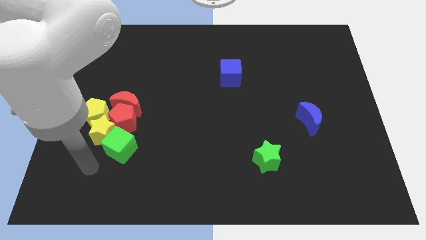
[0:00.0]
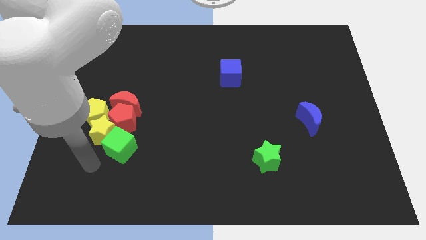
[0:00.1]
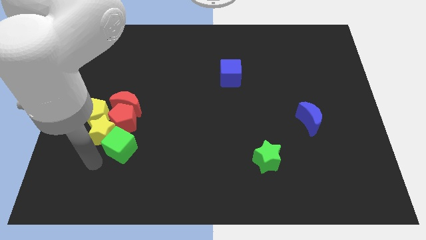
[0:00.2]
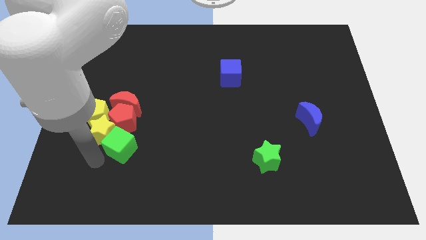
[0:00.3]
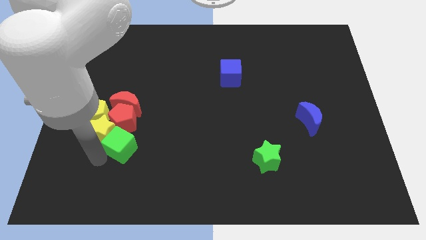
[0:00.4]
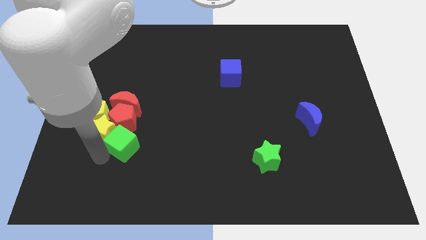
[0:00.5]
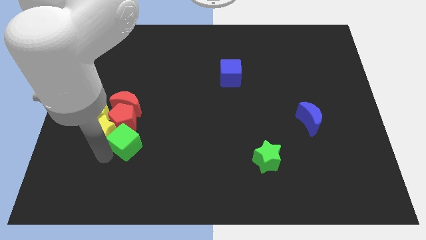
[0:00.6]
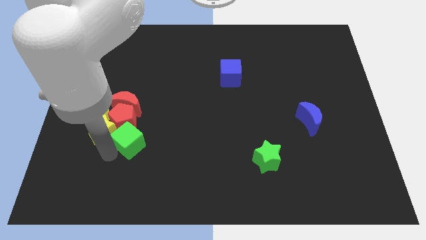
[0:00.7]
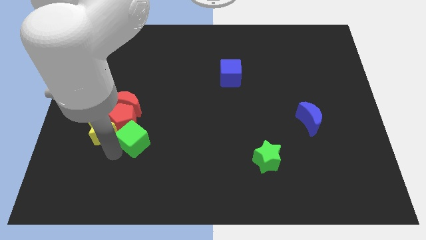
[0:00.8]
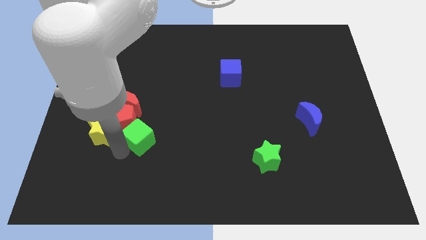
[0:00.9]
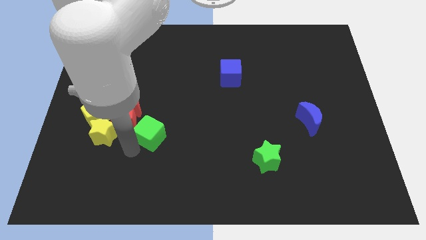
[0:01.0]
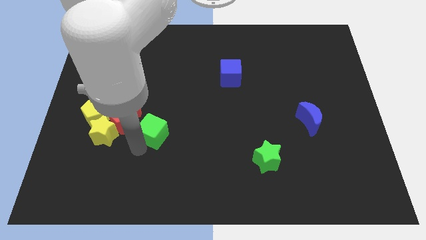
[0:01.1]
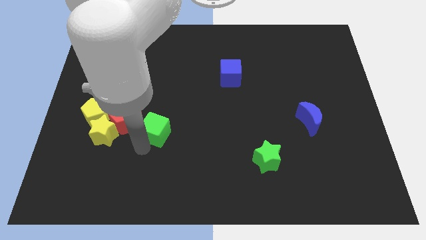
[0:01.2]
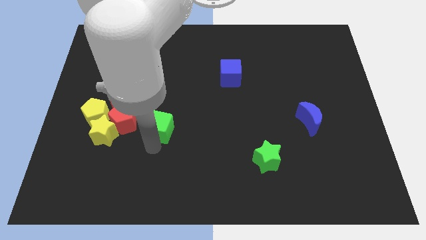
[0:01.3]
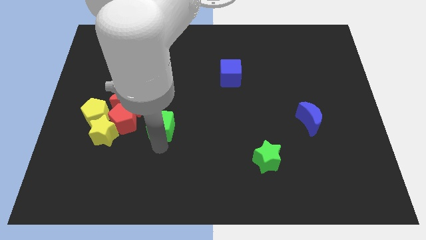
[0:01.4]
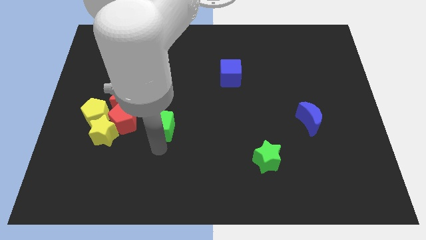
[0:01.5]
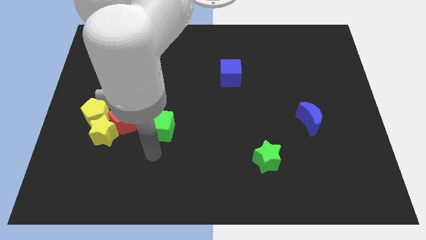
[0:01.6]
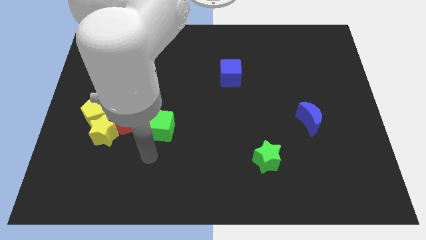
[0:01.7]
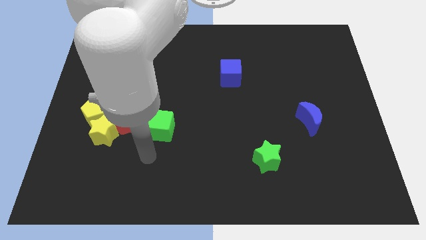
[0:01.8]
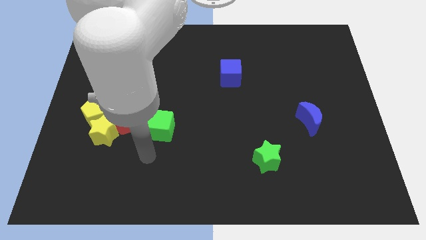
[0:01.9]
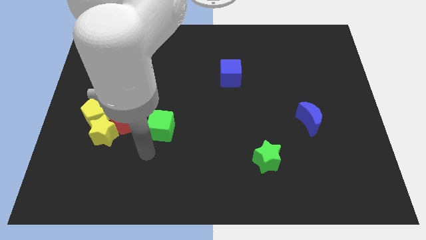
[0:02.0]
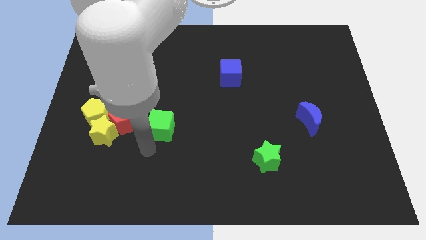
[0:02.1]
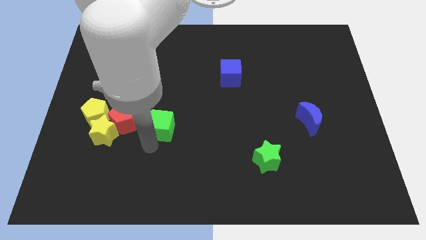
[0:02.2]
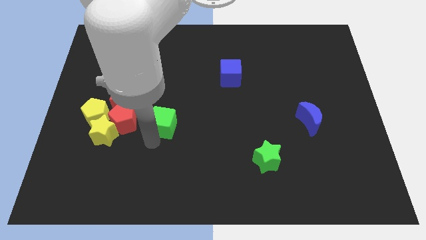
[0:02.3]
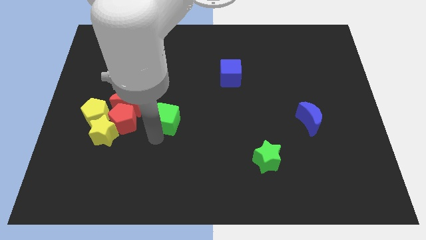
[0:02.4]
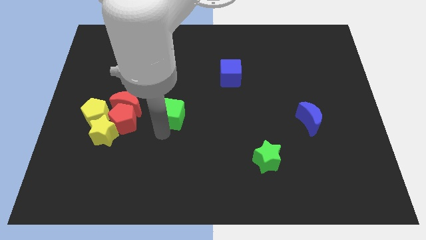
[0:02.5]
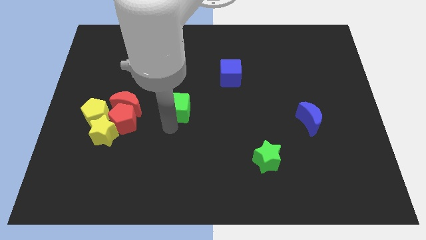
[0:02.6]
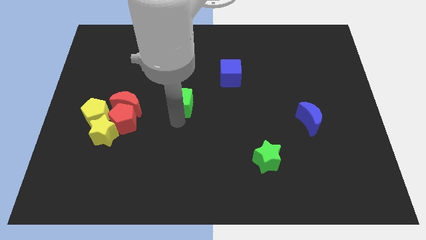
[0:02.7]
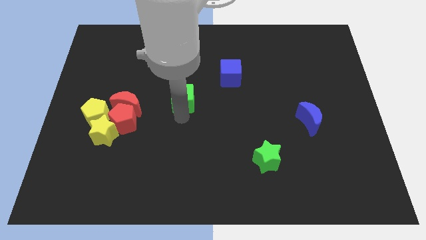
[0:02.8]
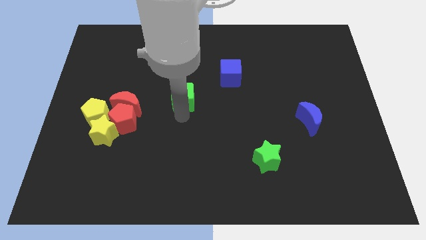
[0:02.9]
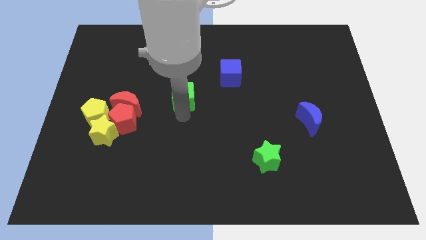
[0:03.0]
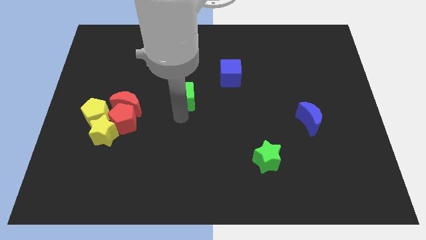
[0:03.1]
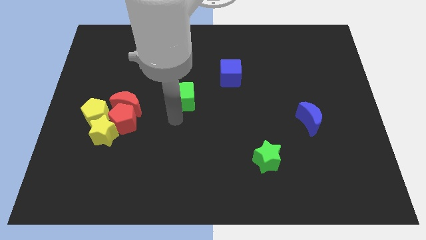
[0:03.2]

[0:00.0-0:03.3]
move the green cube to the bottom left side of the blue cube

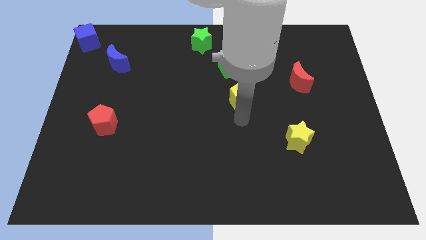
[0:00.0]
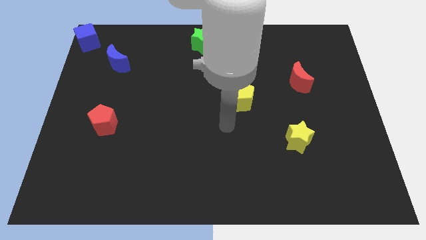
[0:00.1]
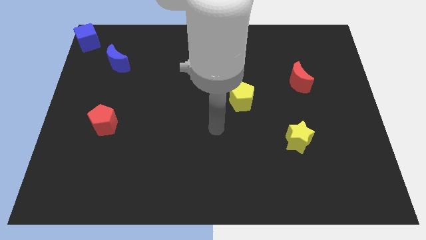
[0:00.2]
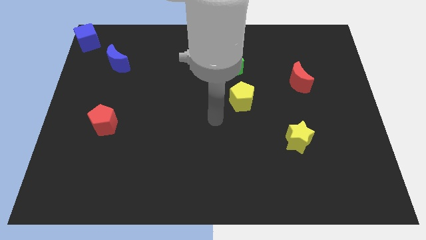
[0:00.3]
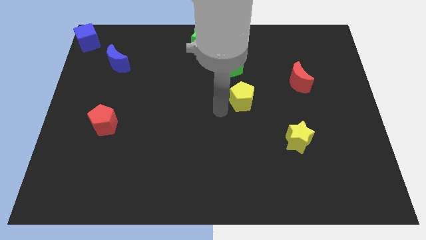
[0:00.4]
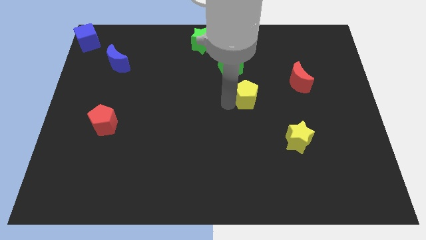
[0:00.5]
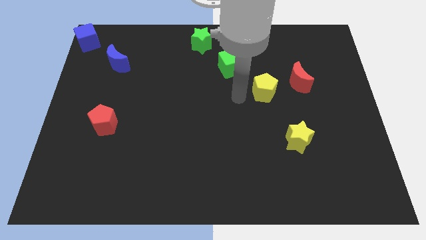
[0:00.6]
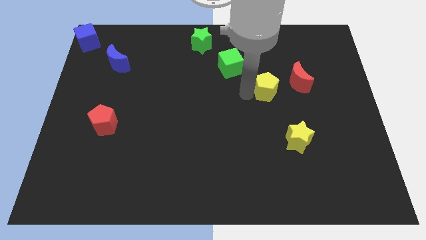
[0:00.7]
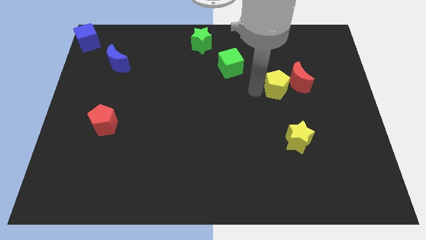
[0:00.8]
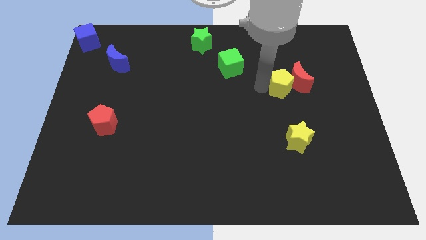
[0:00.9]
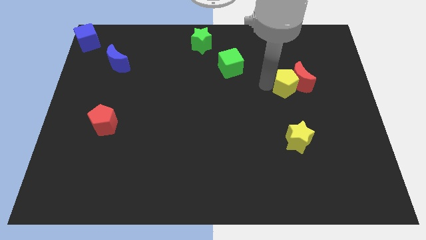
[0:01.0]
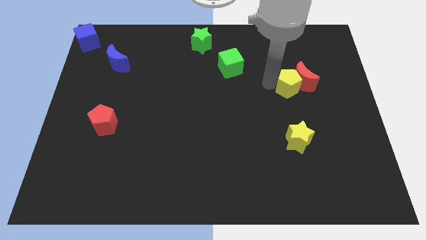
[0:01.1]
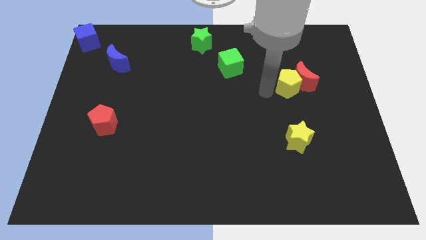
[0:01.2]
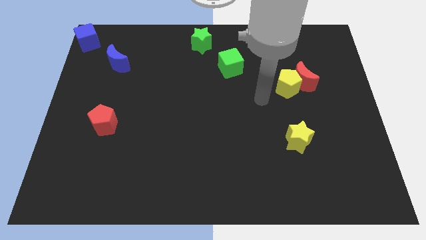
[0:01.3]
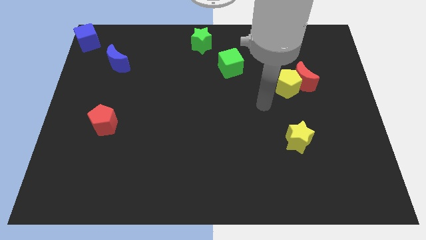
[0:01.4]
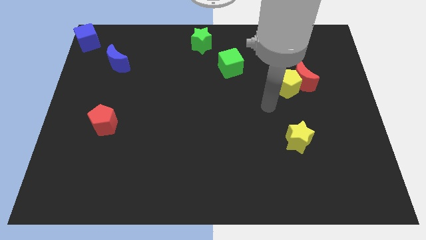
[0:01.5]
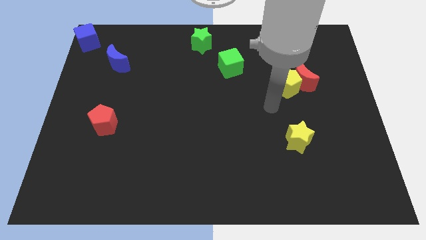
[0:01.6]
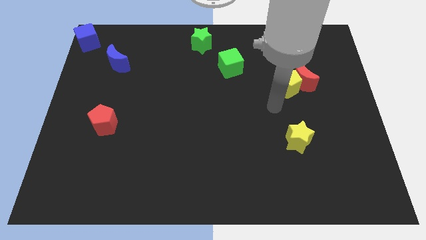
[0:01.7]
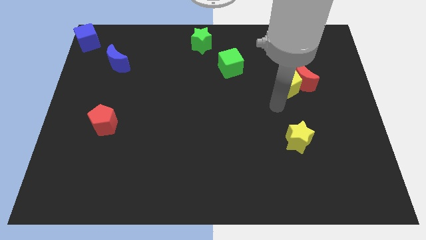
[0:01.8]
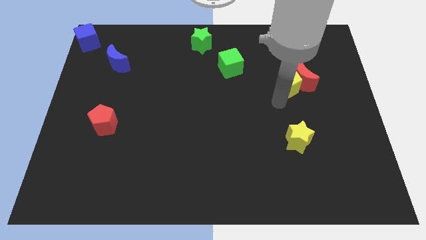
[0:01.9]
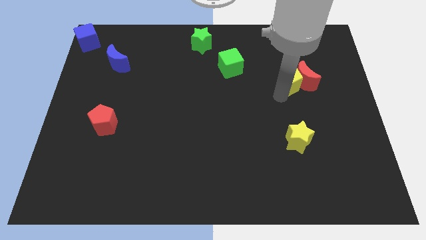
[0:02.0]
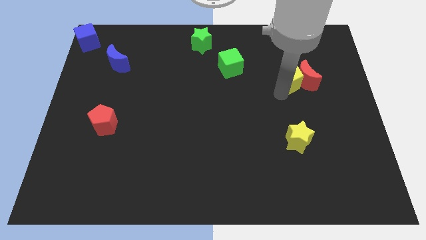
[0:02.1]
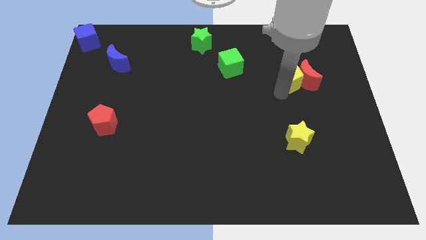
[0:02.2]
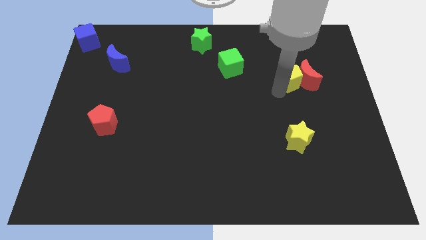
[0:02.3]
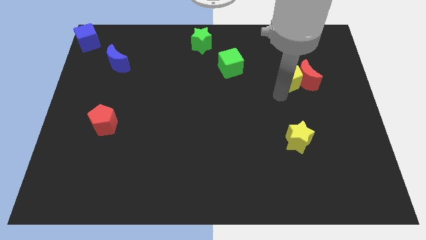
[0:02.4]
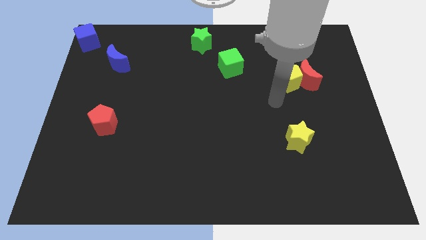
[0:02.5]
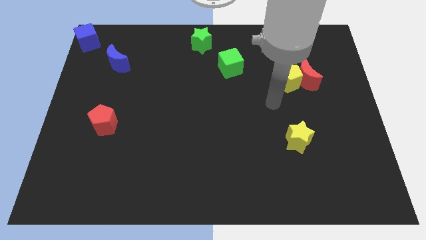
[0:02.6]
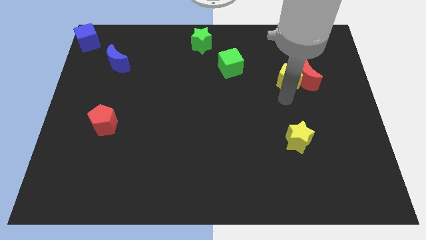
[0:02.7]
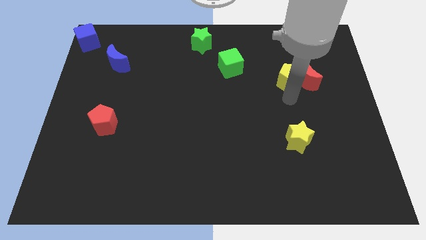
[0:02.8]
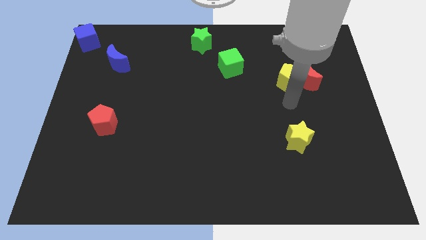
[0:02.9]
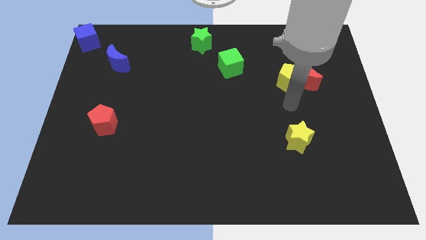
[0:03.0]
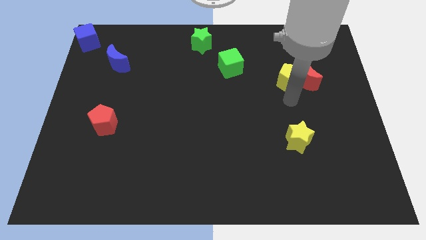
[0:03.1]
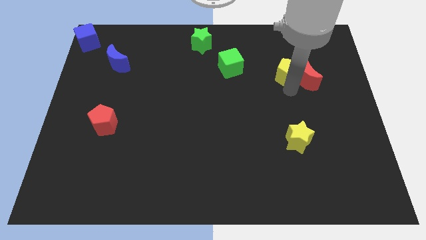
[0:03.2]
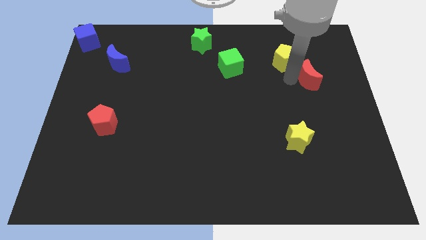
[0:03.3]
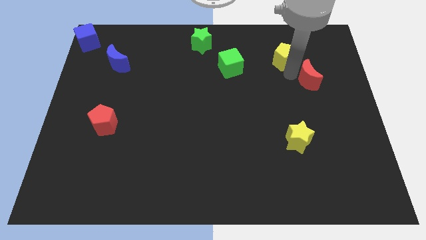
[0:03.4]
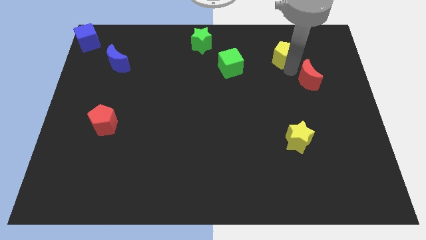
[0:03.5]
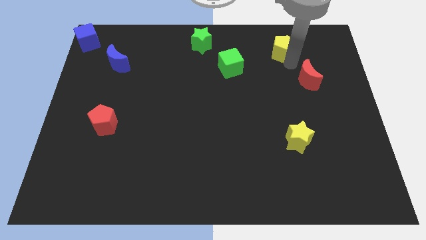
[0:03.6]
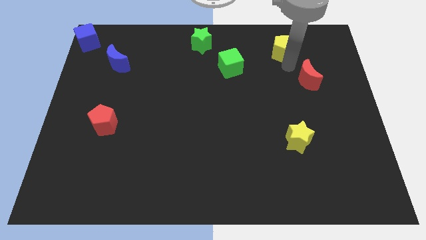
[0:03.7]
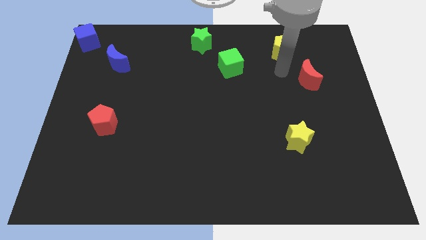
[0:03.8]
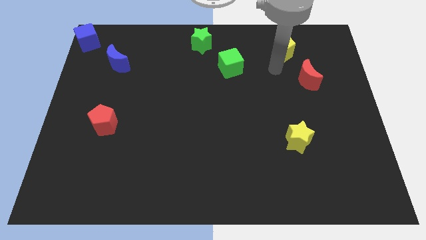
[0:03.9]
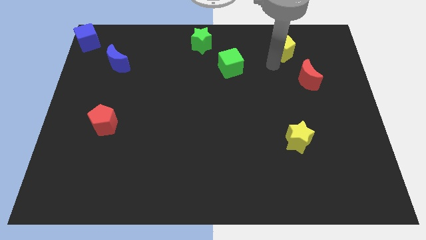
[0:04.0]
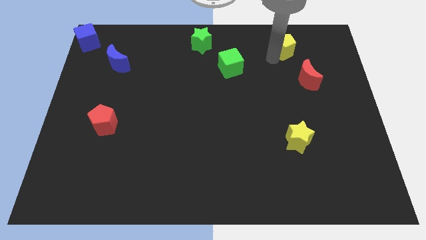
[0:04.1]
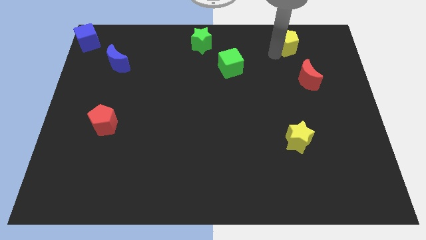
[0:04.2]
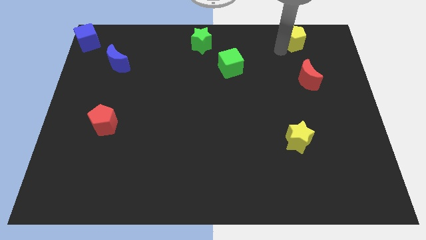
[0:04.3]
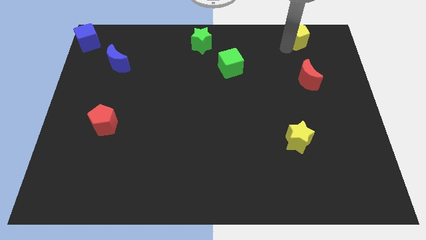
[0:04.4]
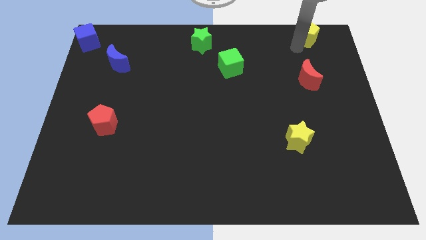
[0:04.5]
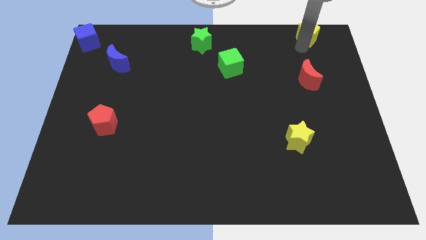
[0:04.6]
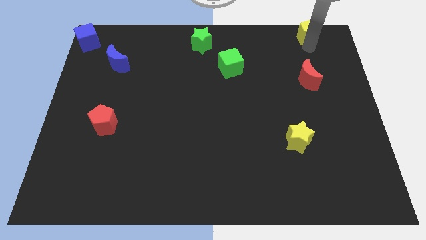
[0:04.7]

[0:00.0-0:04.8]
push the yellow pentagon above the red moon

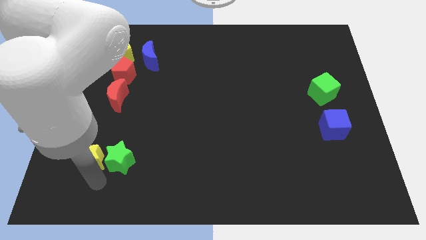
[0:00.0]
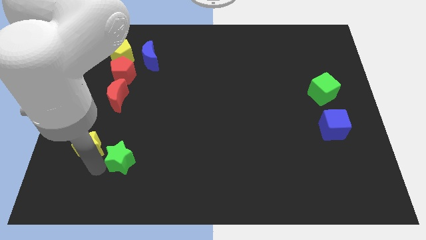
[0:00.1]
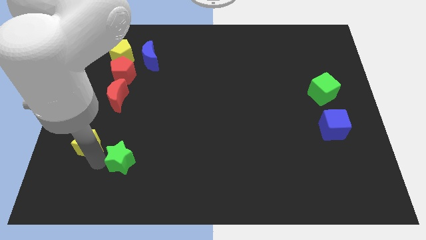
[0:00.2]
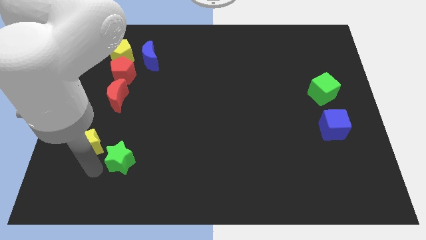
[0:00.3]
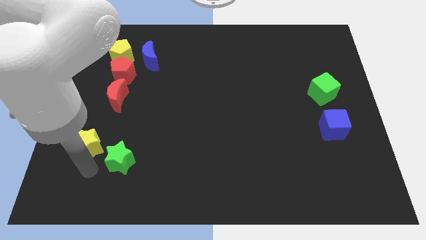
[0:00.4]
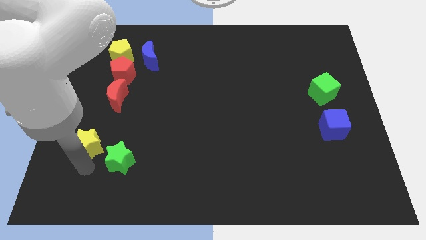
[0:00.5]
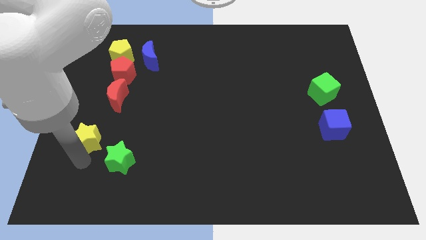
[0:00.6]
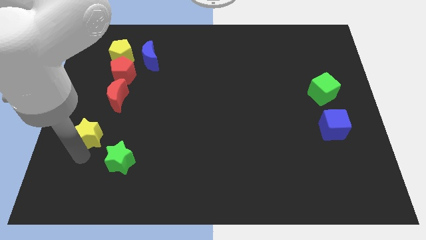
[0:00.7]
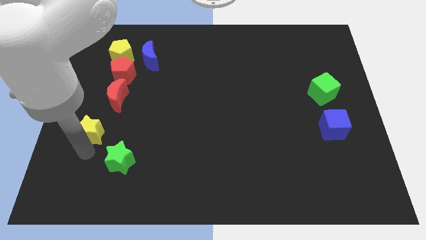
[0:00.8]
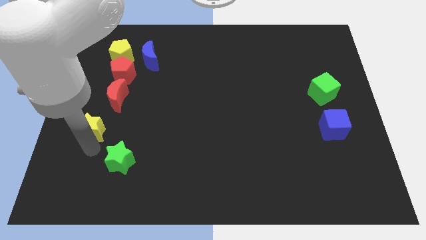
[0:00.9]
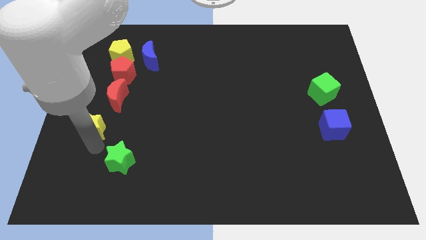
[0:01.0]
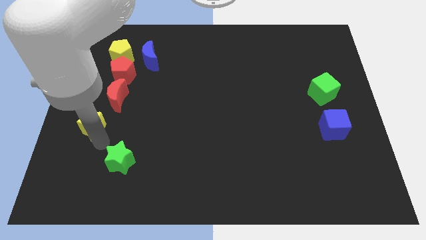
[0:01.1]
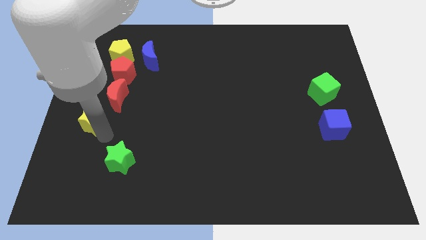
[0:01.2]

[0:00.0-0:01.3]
move yellow star slightly to the top side of the board
